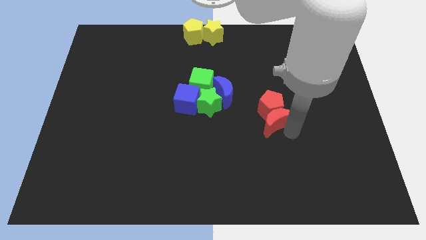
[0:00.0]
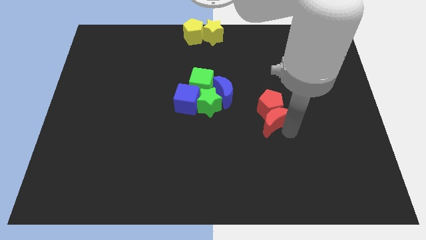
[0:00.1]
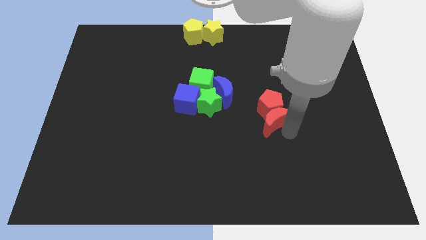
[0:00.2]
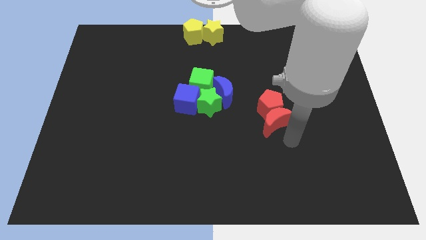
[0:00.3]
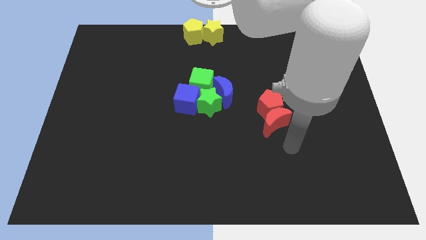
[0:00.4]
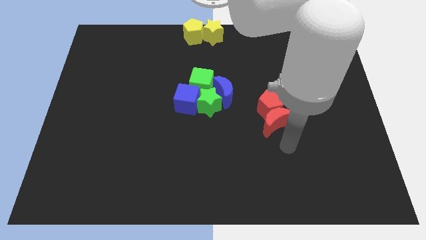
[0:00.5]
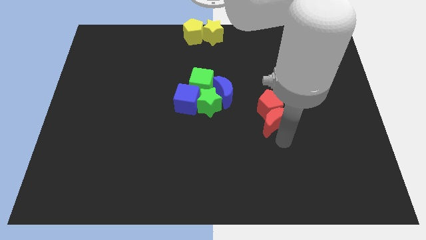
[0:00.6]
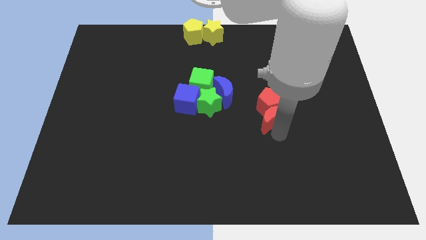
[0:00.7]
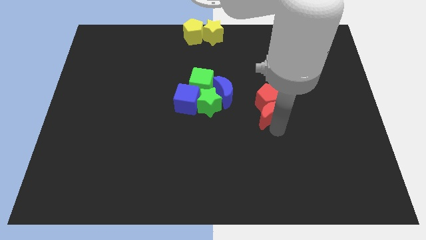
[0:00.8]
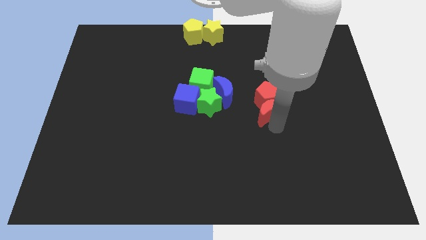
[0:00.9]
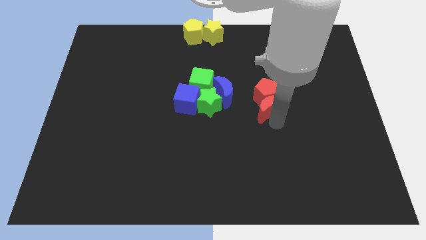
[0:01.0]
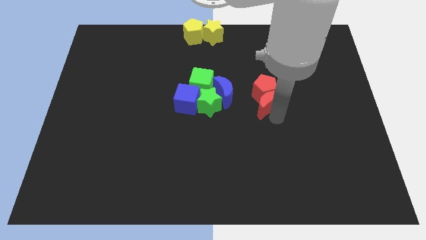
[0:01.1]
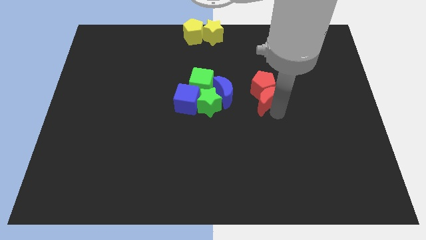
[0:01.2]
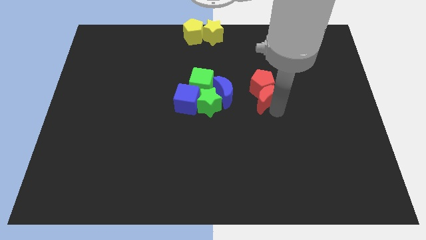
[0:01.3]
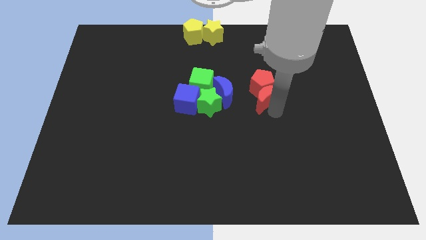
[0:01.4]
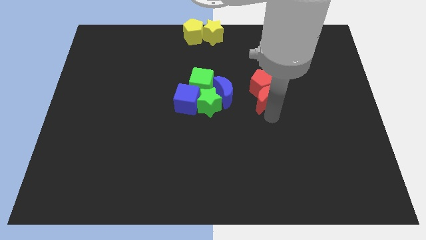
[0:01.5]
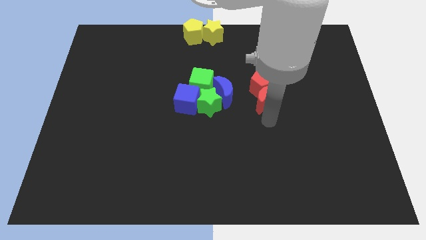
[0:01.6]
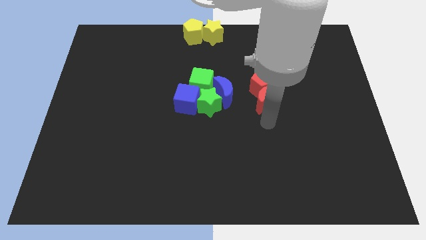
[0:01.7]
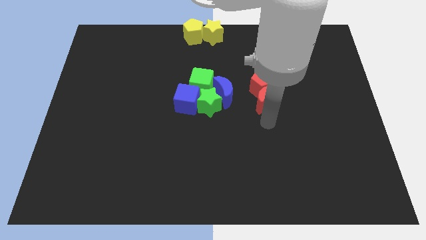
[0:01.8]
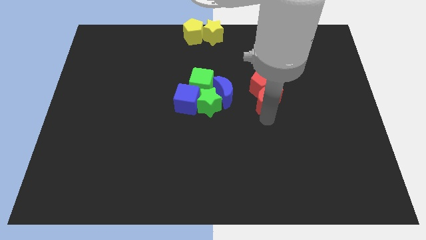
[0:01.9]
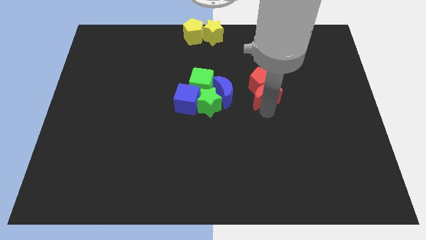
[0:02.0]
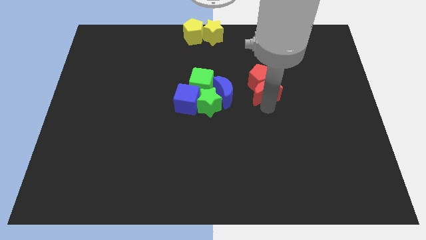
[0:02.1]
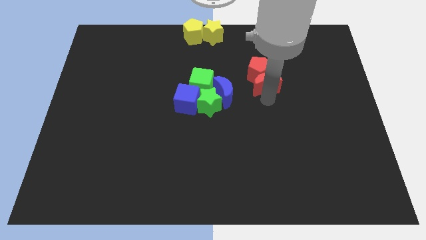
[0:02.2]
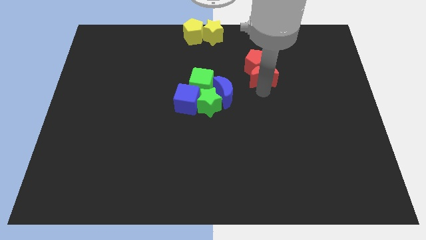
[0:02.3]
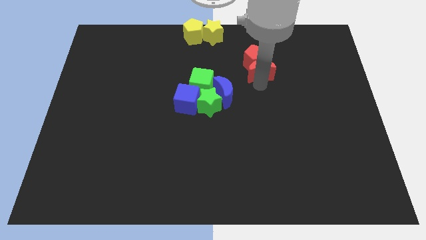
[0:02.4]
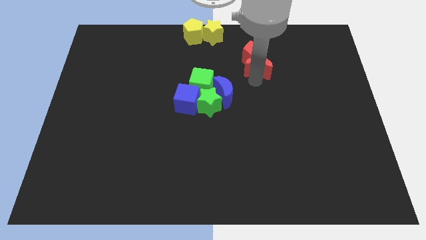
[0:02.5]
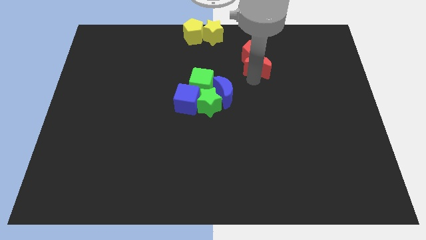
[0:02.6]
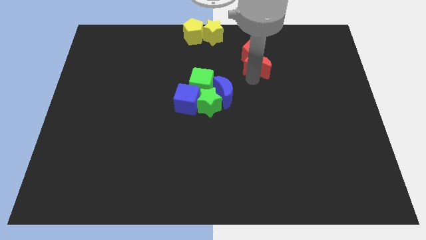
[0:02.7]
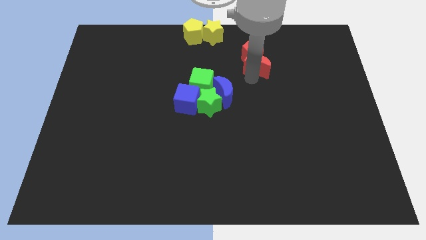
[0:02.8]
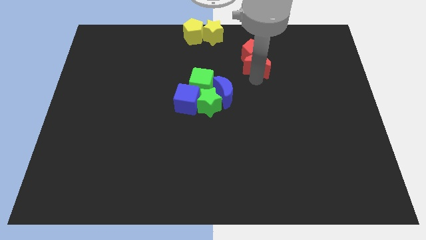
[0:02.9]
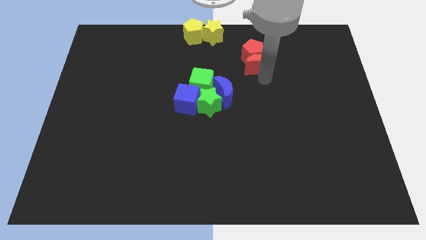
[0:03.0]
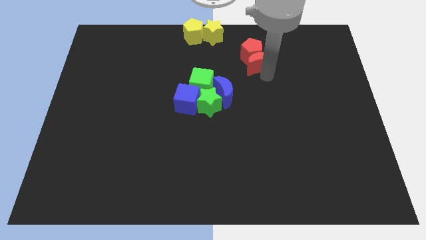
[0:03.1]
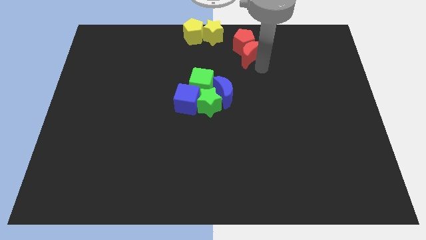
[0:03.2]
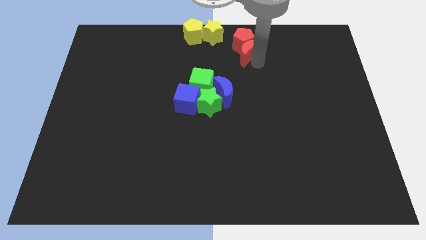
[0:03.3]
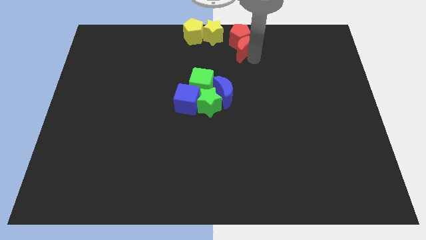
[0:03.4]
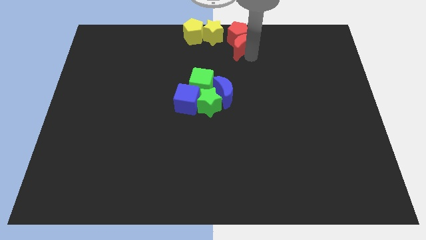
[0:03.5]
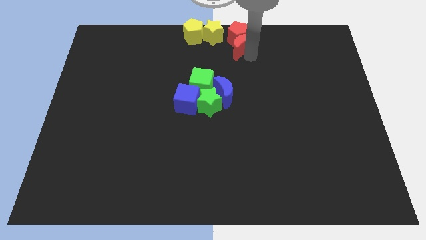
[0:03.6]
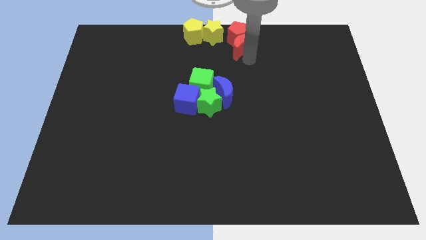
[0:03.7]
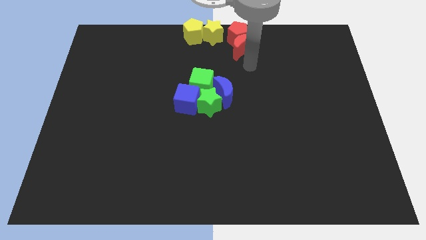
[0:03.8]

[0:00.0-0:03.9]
place red moon and red pentagon to the top center of the board

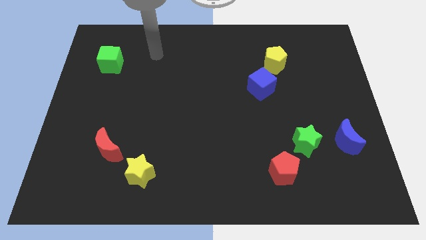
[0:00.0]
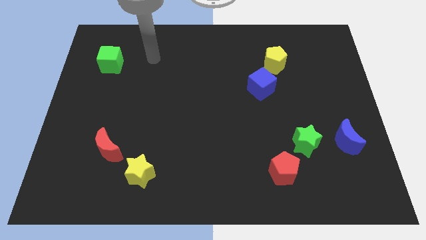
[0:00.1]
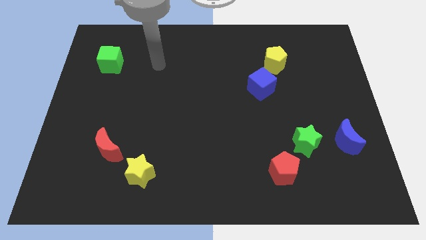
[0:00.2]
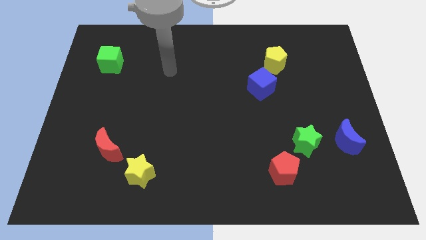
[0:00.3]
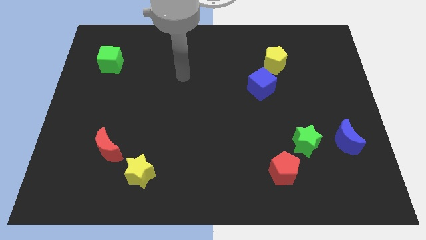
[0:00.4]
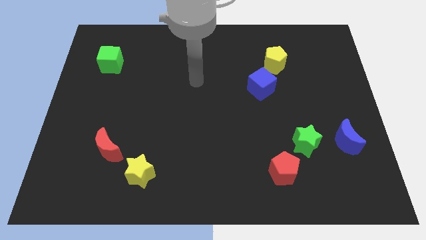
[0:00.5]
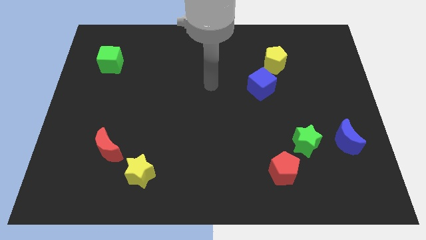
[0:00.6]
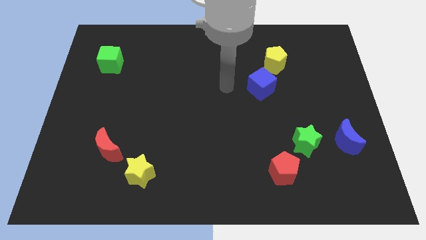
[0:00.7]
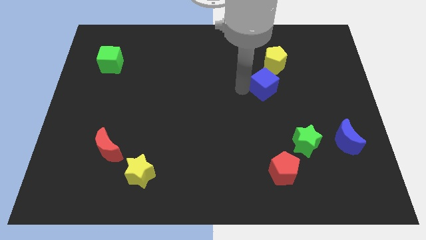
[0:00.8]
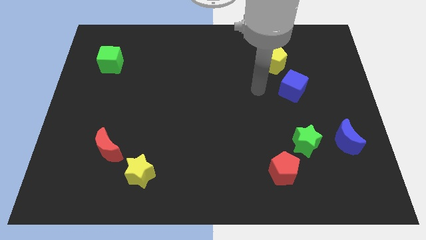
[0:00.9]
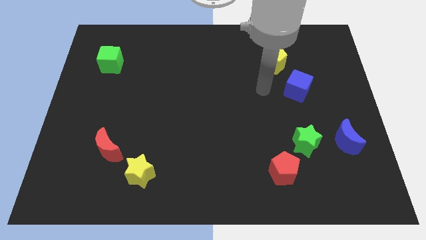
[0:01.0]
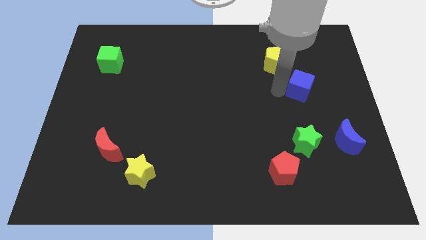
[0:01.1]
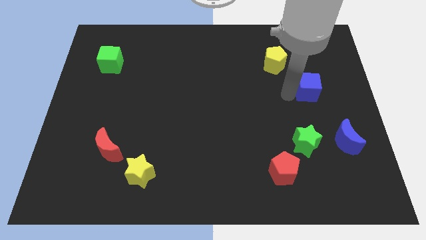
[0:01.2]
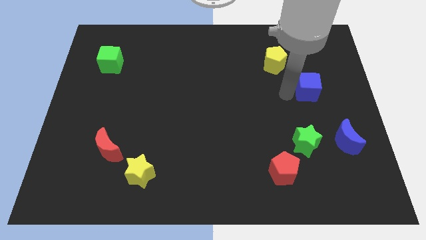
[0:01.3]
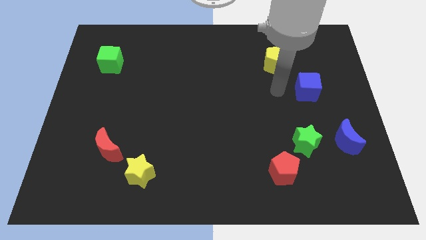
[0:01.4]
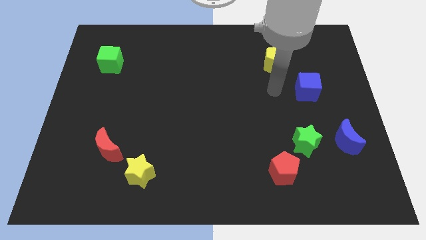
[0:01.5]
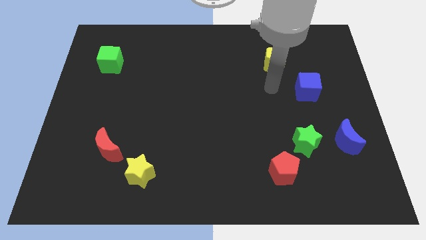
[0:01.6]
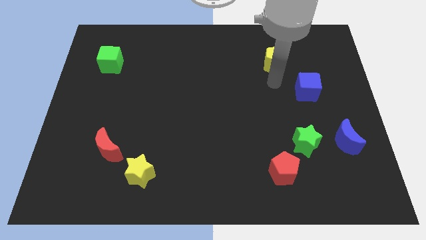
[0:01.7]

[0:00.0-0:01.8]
drag blue cube towards right side of the board

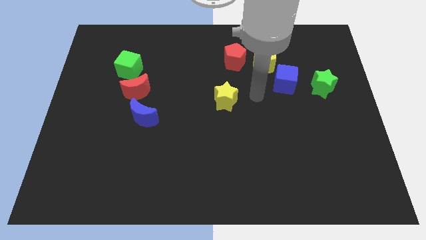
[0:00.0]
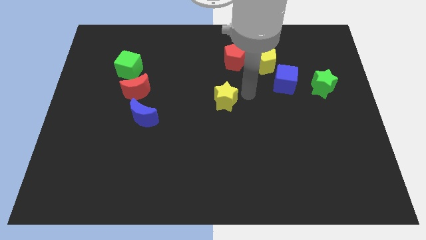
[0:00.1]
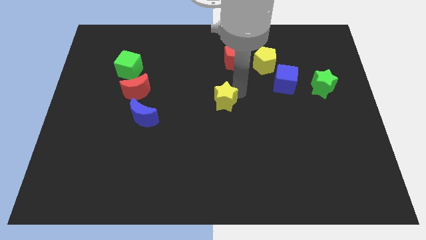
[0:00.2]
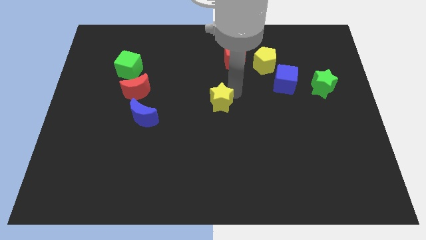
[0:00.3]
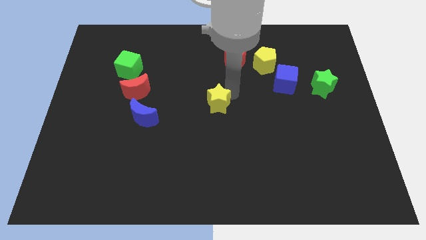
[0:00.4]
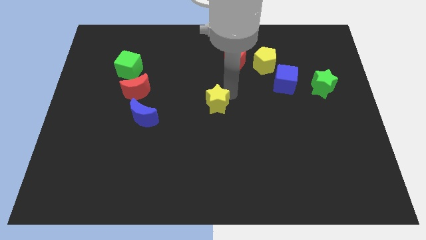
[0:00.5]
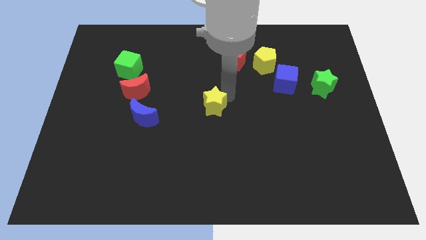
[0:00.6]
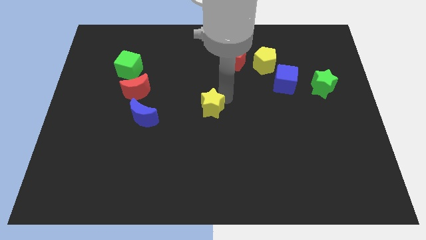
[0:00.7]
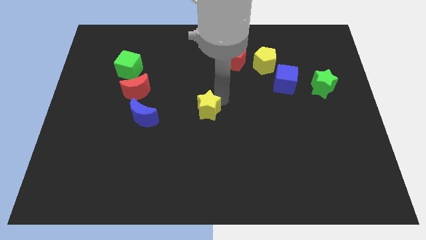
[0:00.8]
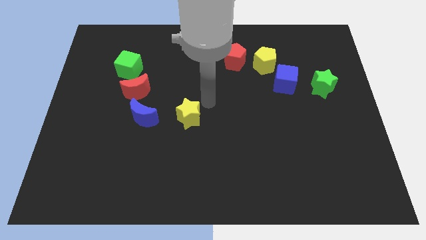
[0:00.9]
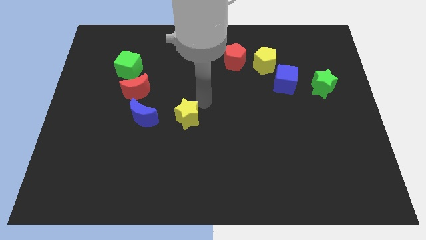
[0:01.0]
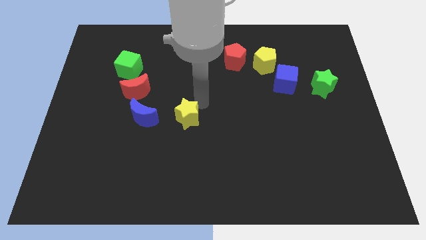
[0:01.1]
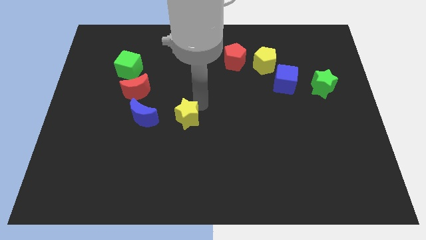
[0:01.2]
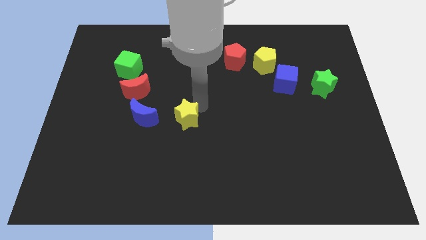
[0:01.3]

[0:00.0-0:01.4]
push the yellow star to the center of the board

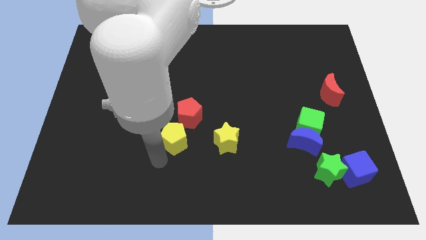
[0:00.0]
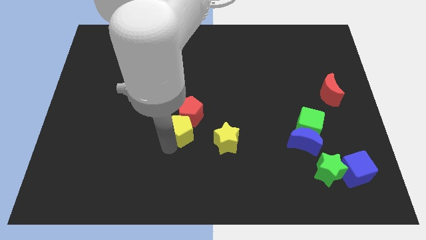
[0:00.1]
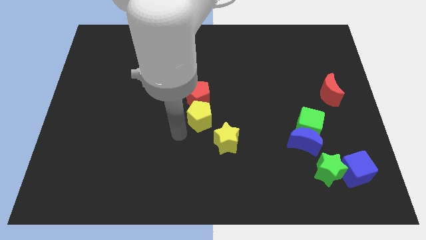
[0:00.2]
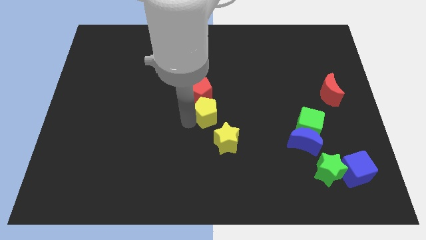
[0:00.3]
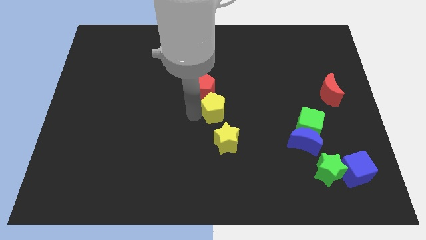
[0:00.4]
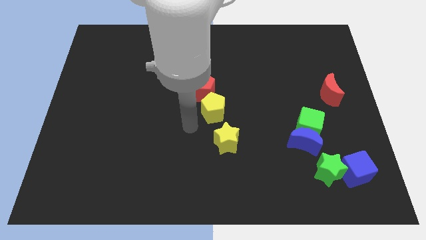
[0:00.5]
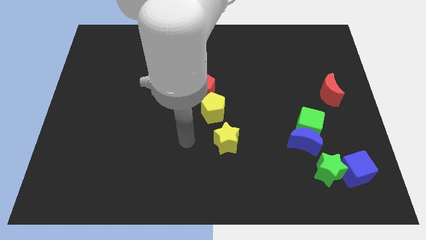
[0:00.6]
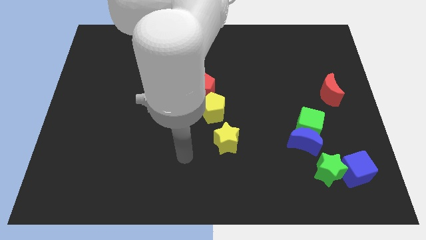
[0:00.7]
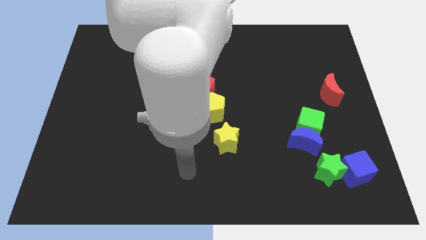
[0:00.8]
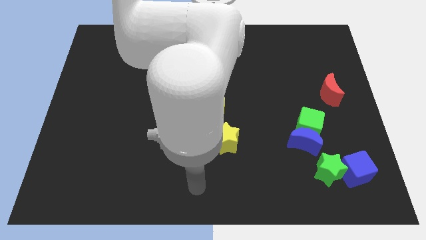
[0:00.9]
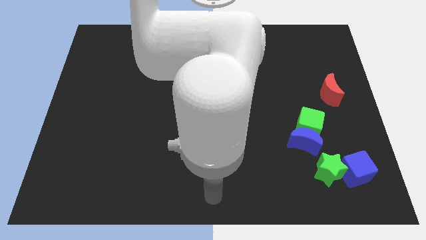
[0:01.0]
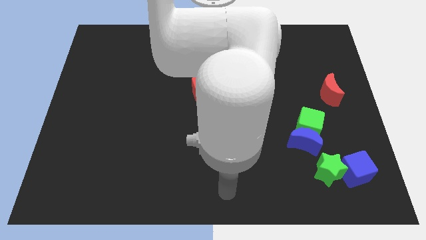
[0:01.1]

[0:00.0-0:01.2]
push the yellow pentagon with the red pentagon to the center of the board

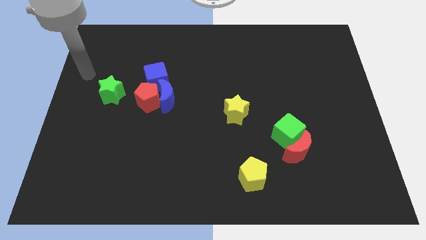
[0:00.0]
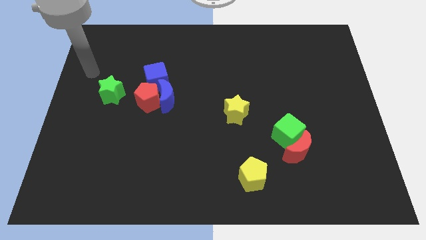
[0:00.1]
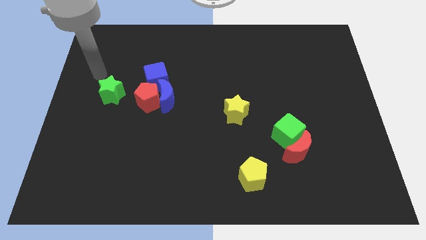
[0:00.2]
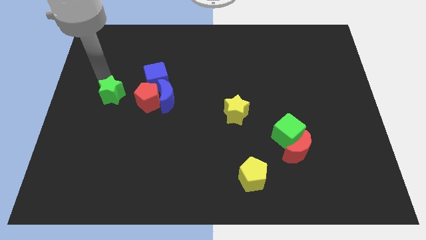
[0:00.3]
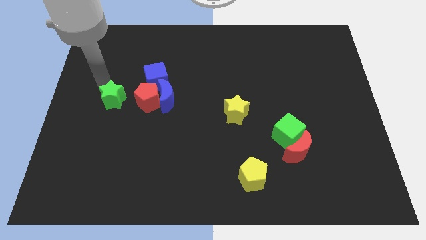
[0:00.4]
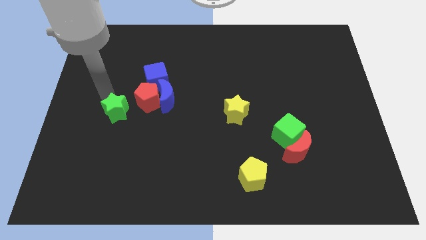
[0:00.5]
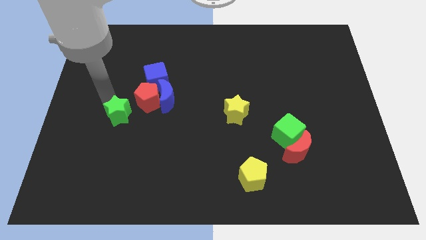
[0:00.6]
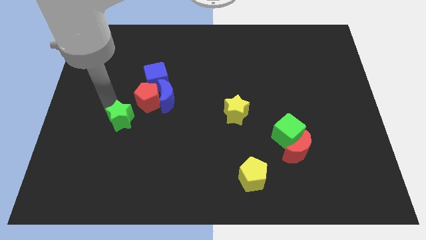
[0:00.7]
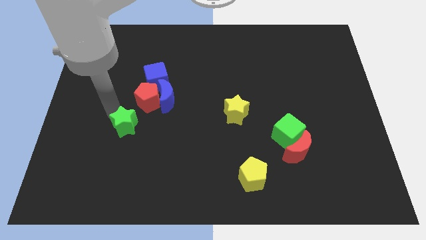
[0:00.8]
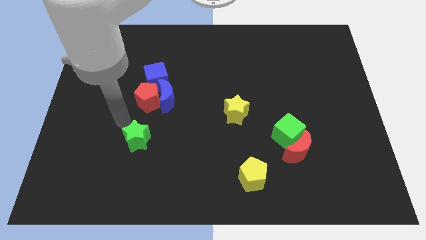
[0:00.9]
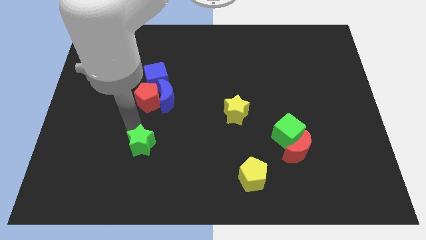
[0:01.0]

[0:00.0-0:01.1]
push the green star downwards
